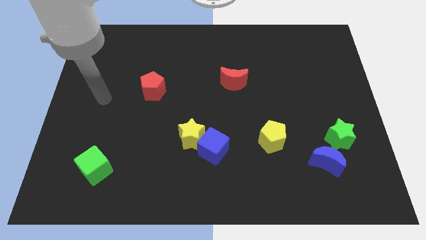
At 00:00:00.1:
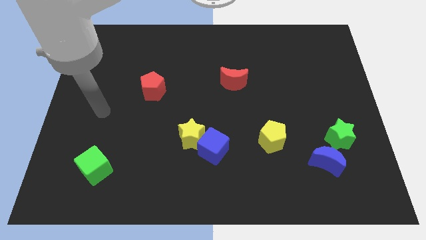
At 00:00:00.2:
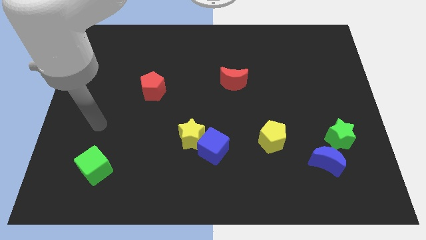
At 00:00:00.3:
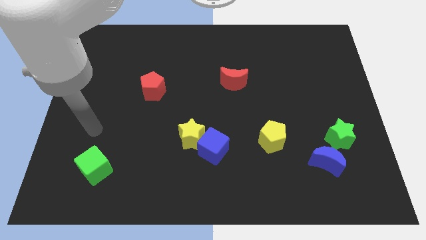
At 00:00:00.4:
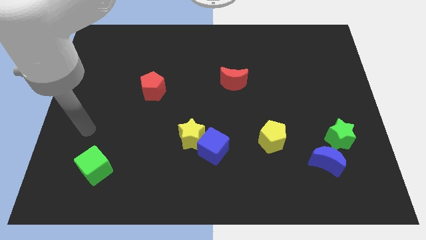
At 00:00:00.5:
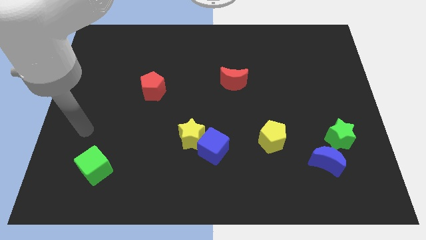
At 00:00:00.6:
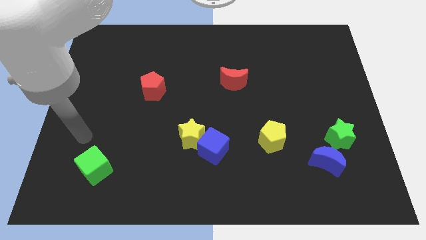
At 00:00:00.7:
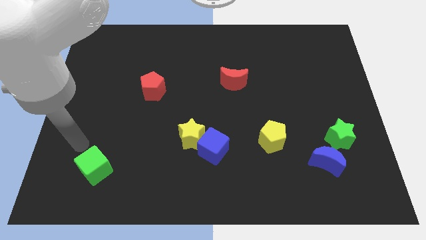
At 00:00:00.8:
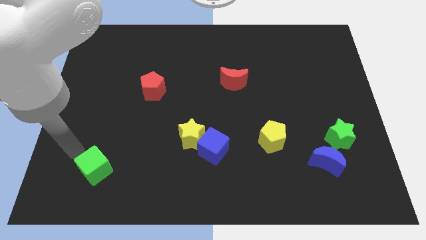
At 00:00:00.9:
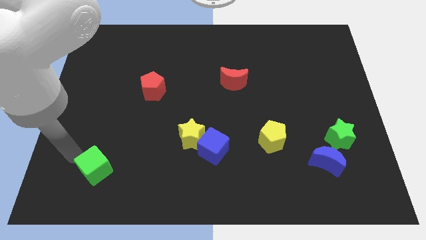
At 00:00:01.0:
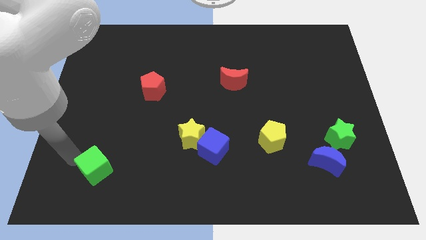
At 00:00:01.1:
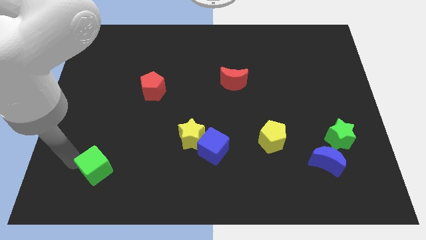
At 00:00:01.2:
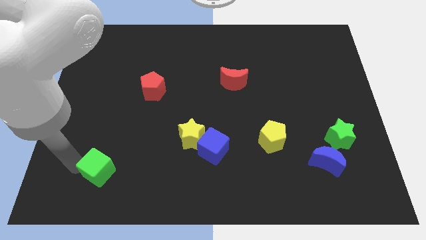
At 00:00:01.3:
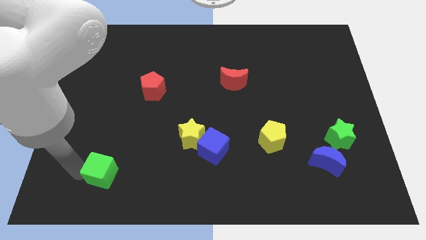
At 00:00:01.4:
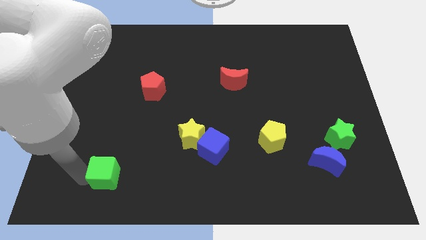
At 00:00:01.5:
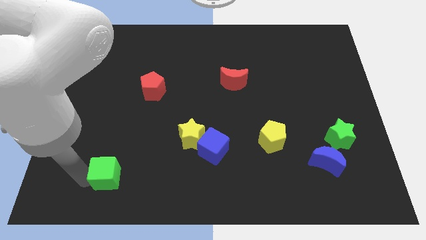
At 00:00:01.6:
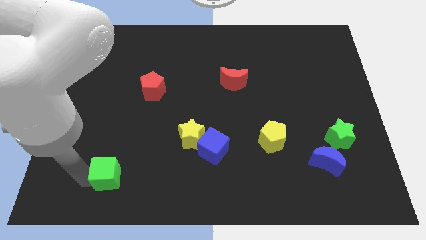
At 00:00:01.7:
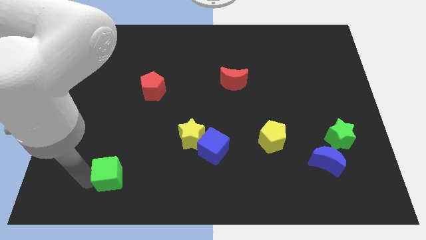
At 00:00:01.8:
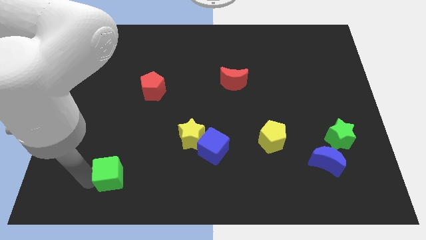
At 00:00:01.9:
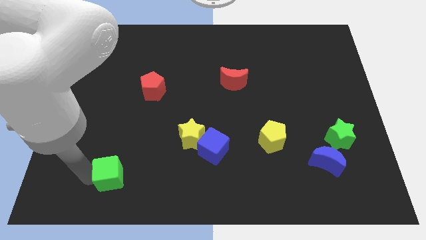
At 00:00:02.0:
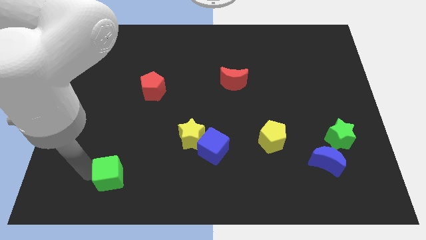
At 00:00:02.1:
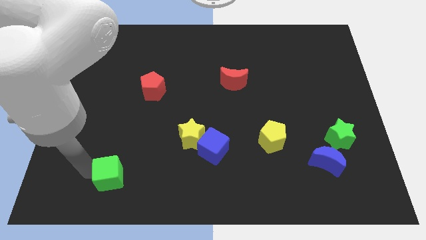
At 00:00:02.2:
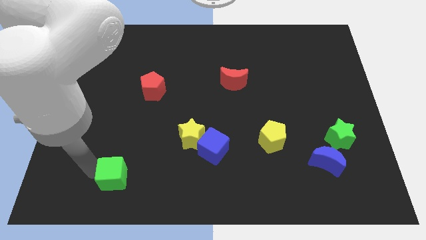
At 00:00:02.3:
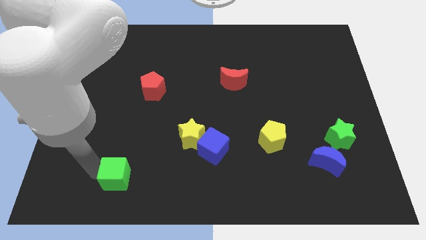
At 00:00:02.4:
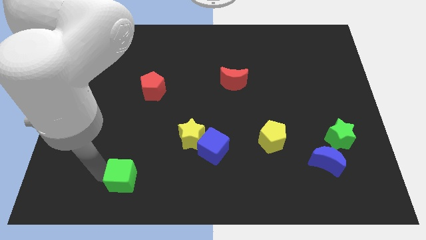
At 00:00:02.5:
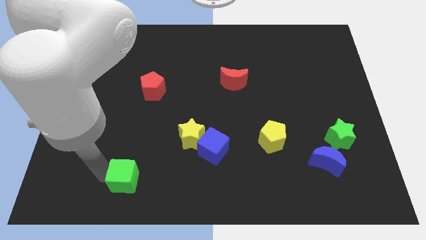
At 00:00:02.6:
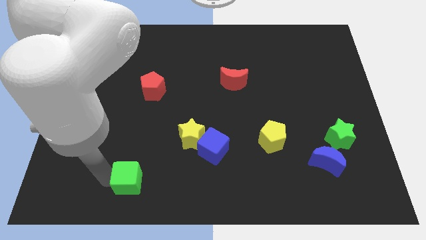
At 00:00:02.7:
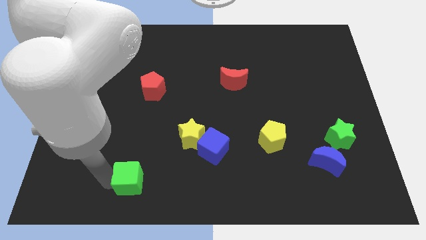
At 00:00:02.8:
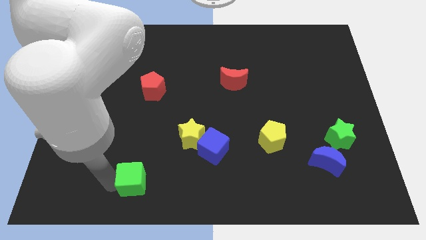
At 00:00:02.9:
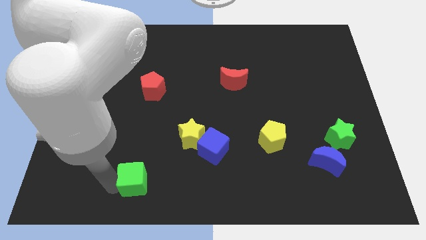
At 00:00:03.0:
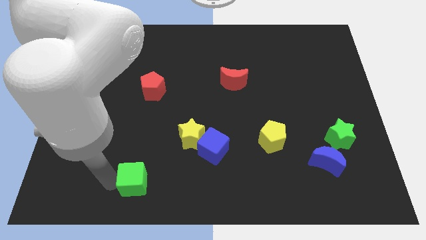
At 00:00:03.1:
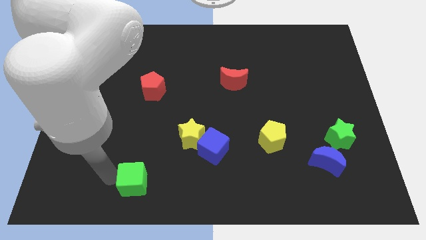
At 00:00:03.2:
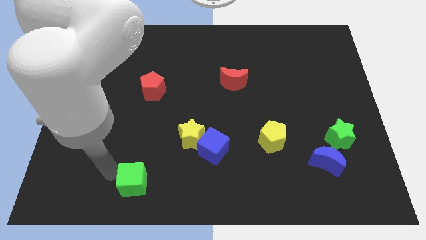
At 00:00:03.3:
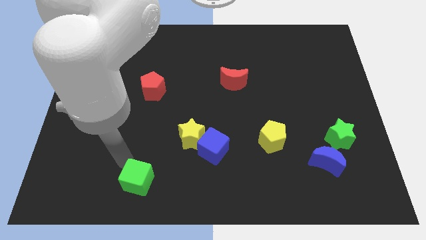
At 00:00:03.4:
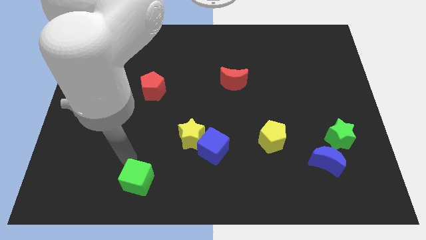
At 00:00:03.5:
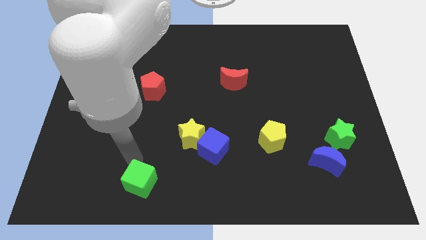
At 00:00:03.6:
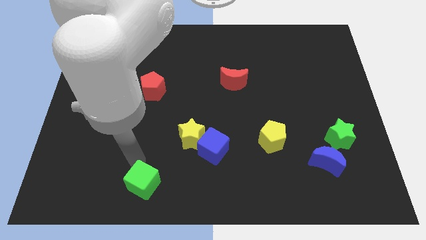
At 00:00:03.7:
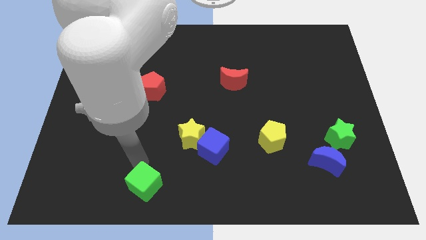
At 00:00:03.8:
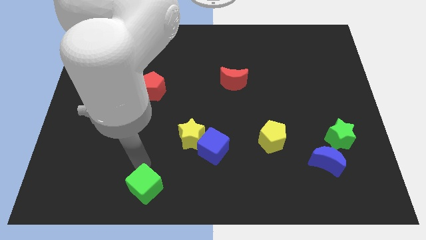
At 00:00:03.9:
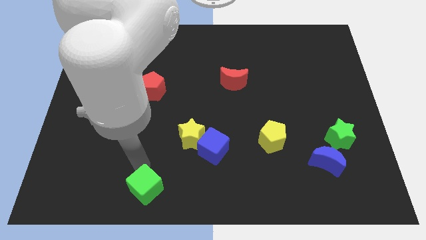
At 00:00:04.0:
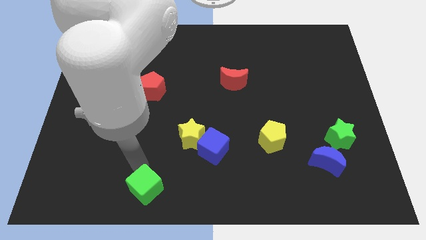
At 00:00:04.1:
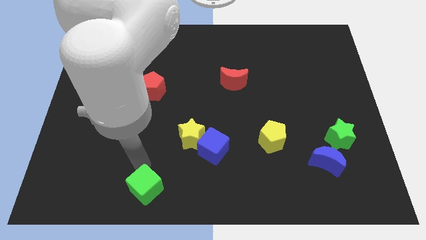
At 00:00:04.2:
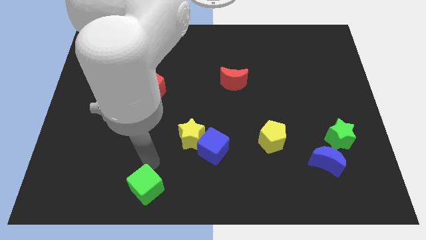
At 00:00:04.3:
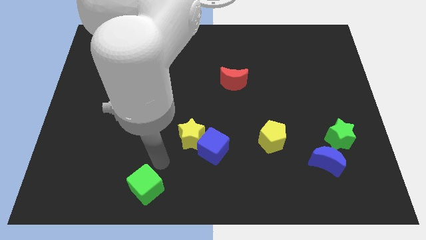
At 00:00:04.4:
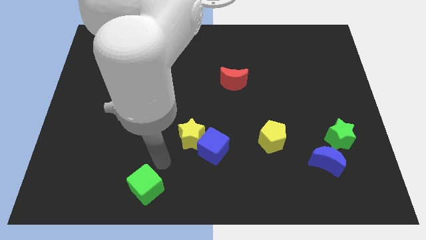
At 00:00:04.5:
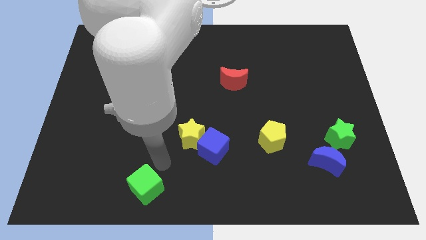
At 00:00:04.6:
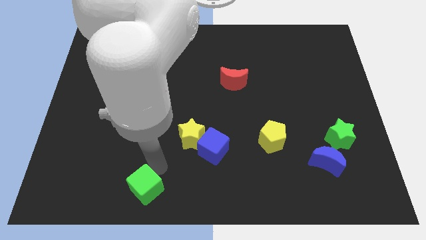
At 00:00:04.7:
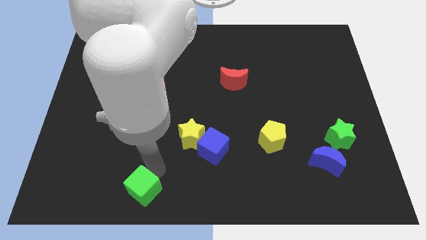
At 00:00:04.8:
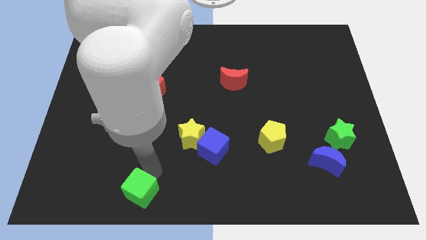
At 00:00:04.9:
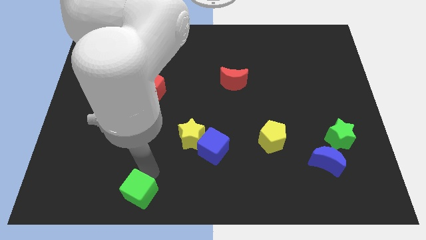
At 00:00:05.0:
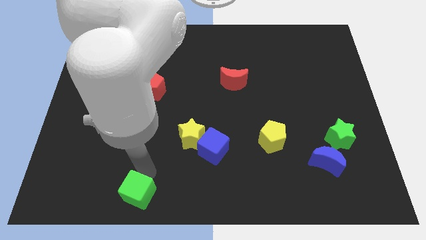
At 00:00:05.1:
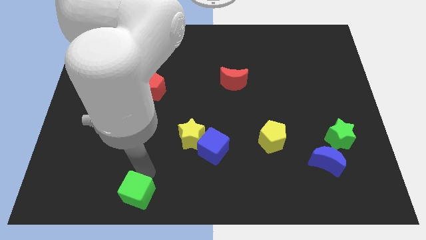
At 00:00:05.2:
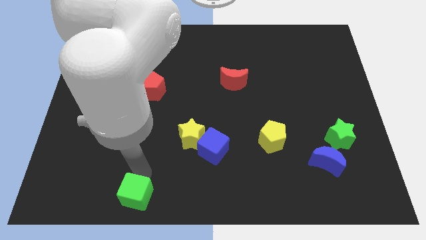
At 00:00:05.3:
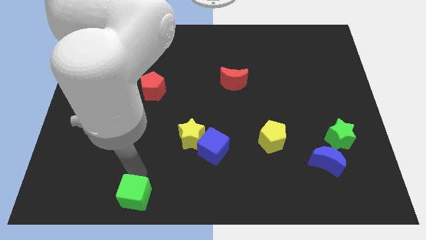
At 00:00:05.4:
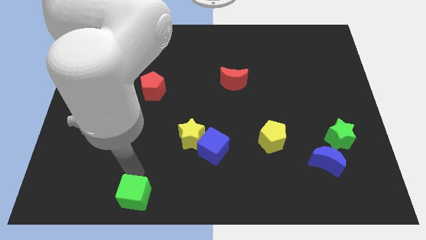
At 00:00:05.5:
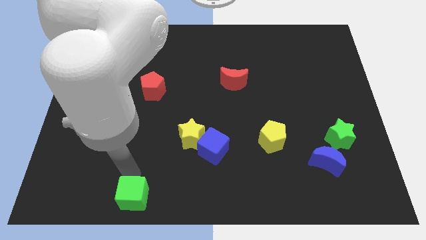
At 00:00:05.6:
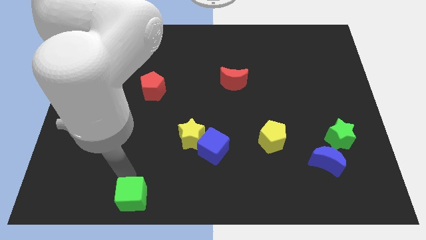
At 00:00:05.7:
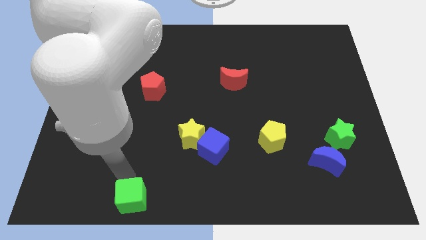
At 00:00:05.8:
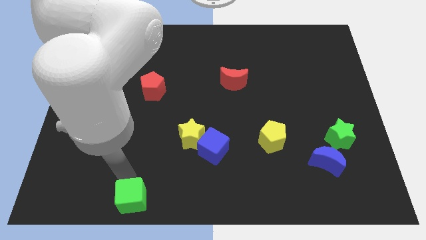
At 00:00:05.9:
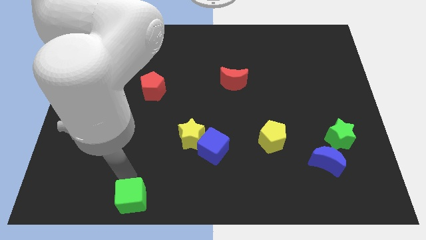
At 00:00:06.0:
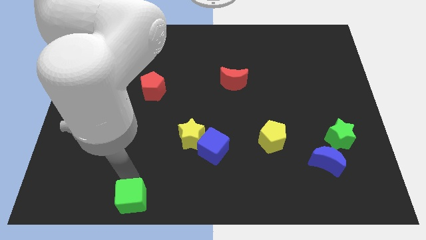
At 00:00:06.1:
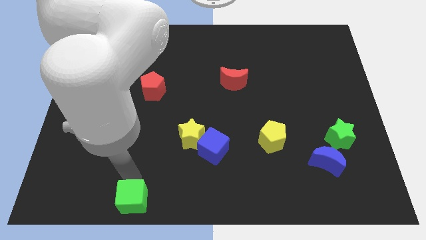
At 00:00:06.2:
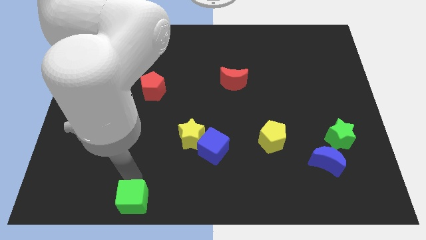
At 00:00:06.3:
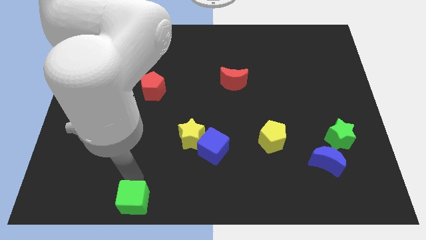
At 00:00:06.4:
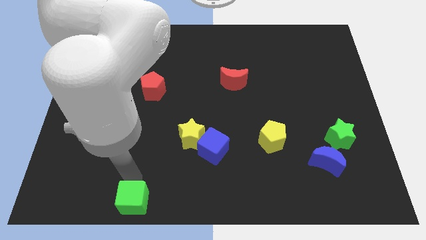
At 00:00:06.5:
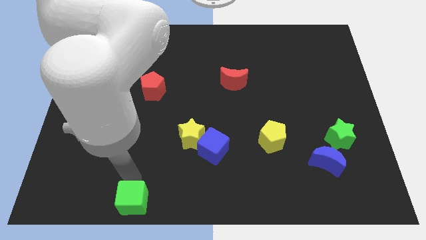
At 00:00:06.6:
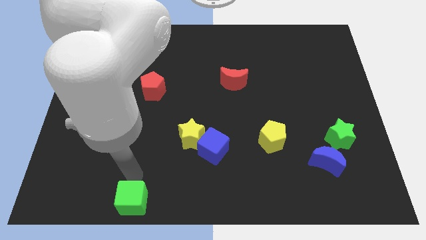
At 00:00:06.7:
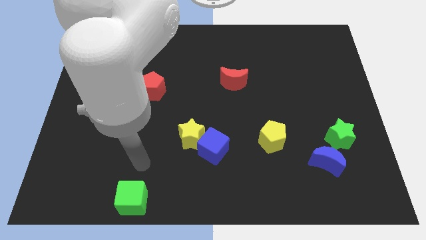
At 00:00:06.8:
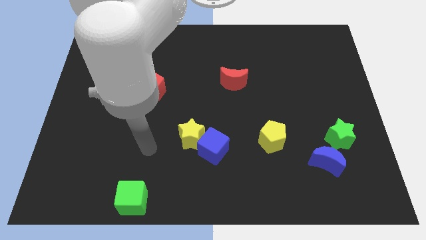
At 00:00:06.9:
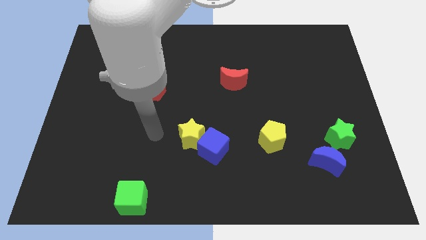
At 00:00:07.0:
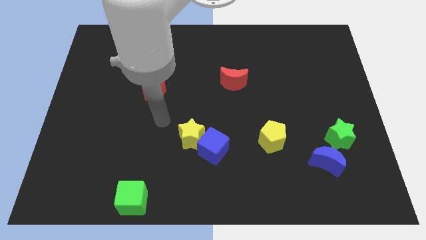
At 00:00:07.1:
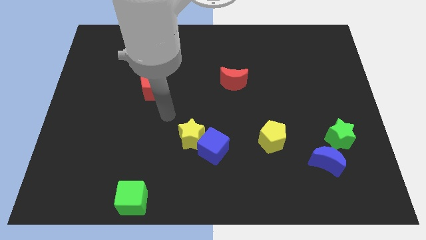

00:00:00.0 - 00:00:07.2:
move the green cube to the bottom

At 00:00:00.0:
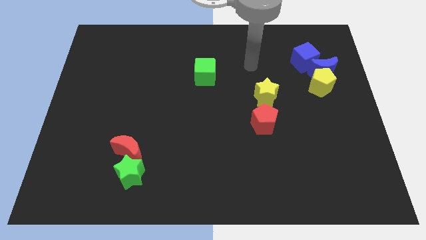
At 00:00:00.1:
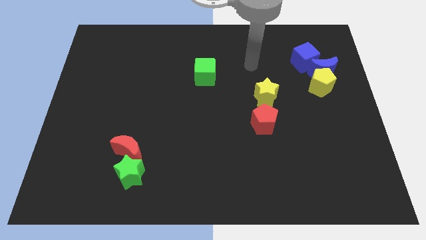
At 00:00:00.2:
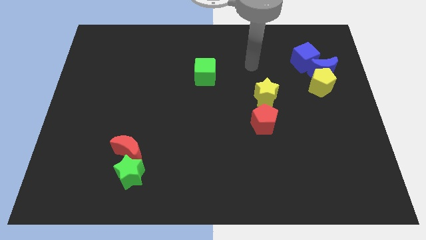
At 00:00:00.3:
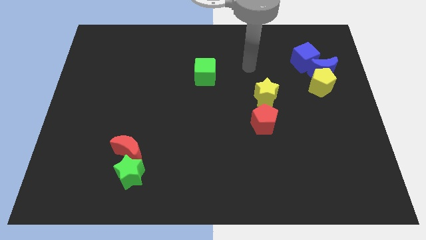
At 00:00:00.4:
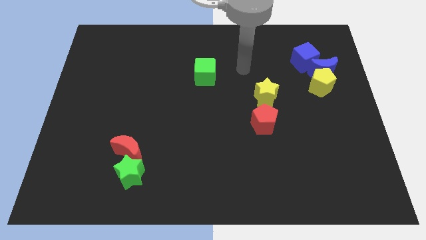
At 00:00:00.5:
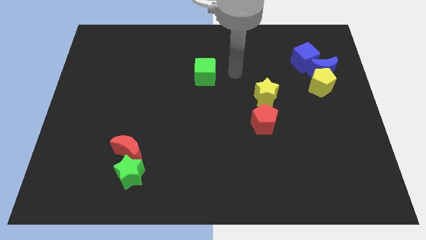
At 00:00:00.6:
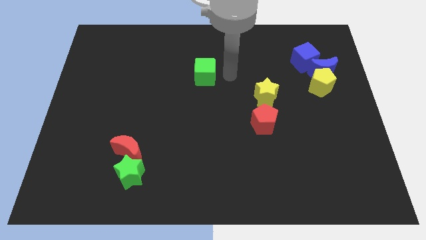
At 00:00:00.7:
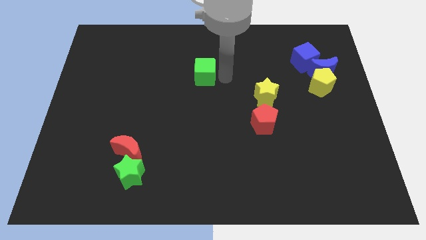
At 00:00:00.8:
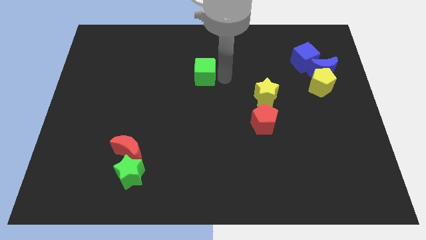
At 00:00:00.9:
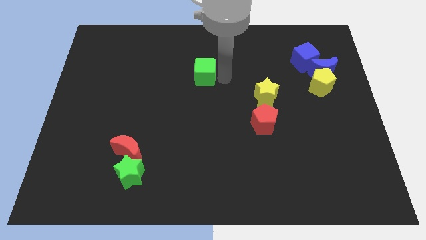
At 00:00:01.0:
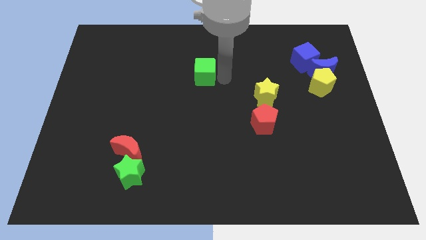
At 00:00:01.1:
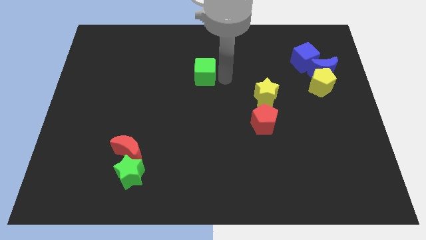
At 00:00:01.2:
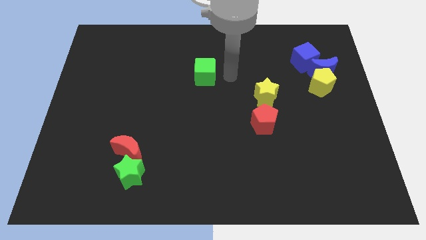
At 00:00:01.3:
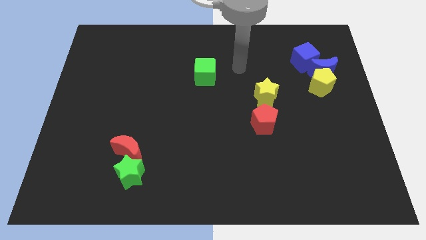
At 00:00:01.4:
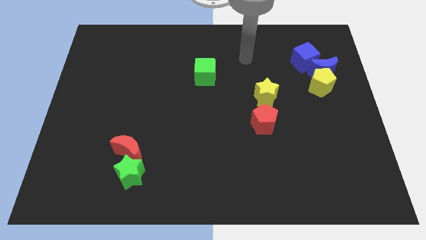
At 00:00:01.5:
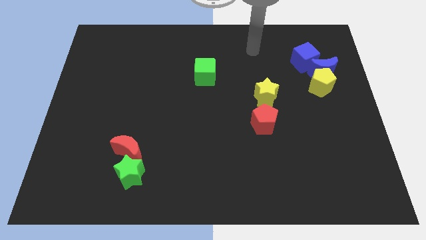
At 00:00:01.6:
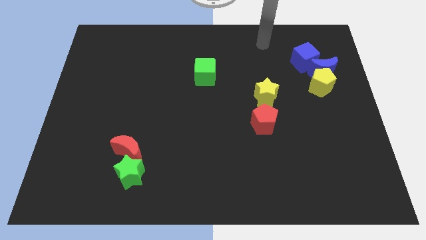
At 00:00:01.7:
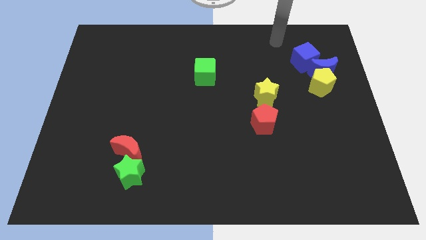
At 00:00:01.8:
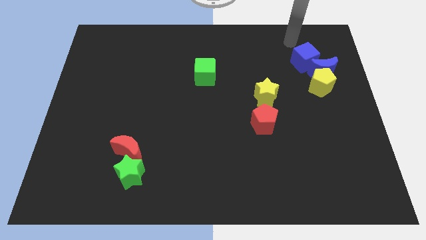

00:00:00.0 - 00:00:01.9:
move the arm towards the blue cube
